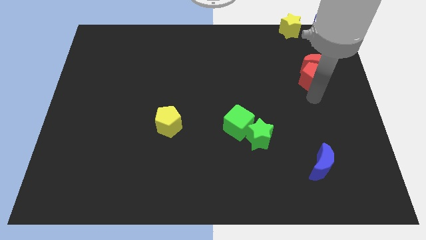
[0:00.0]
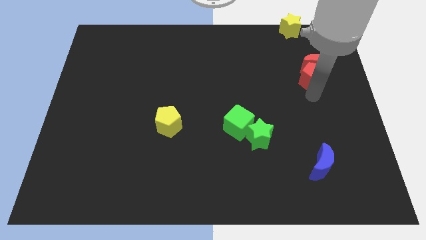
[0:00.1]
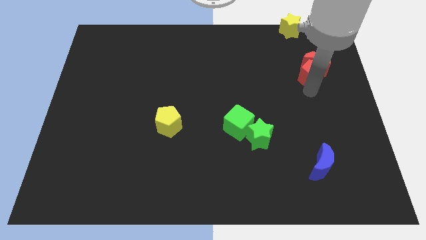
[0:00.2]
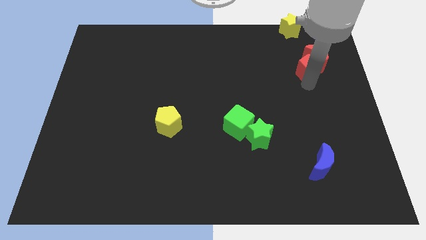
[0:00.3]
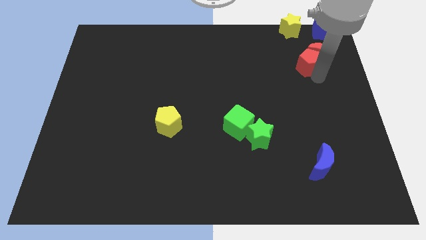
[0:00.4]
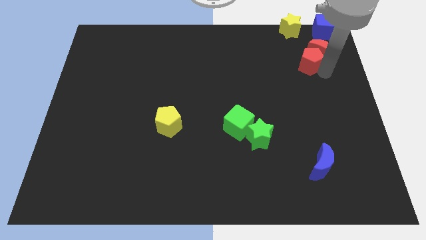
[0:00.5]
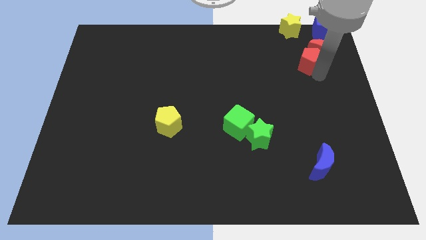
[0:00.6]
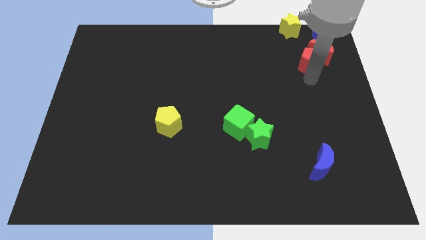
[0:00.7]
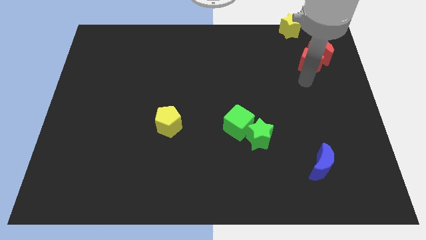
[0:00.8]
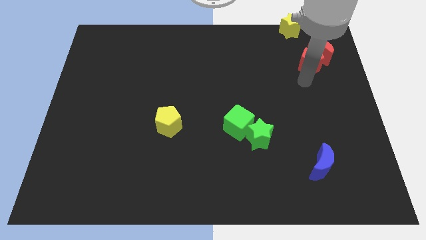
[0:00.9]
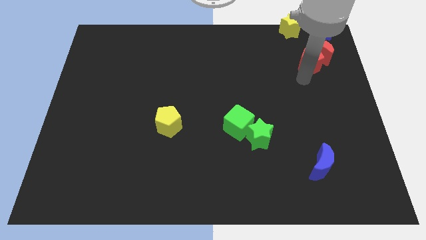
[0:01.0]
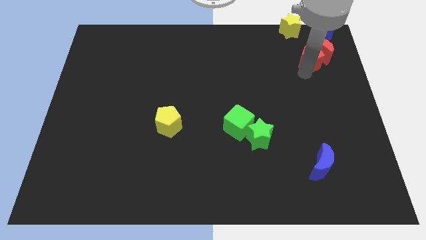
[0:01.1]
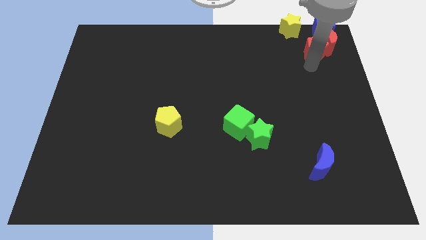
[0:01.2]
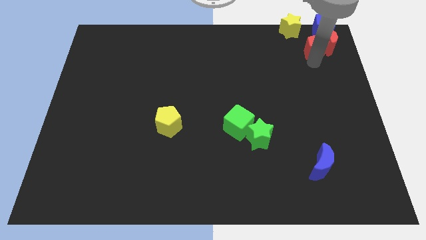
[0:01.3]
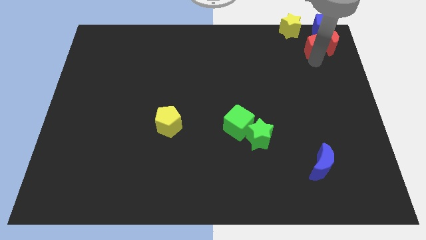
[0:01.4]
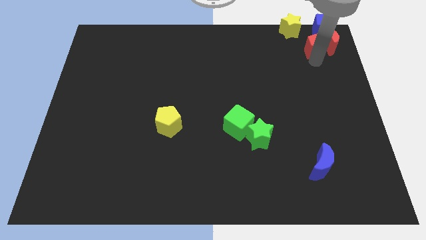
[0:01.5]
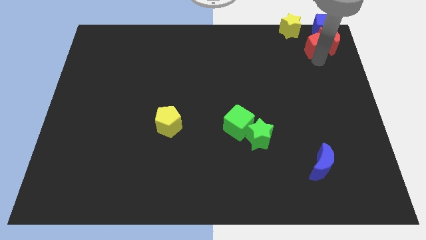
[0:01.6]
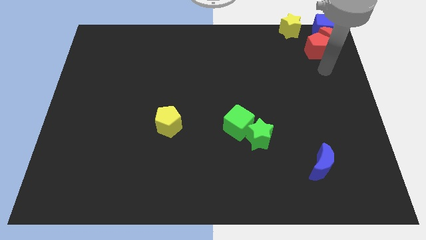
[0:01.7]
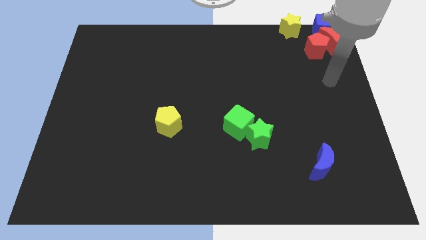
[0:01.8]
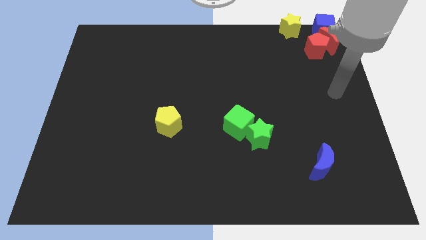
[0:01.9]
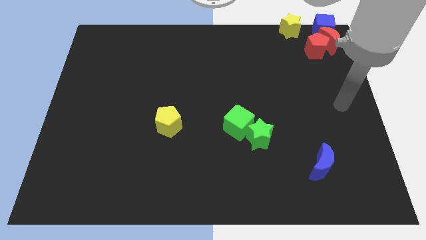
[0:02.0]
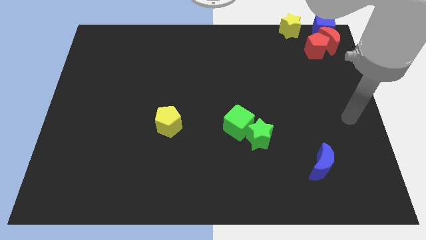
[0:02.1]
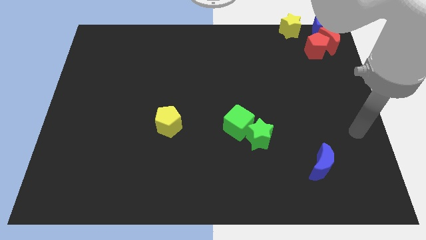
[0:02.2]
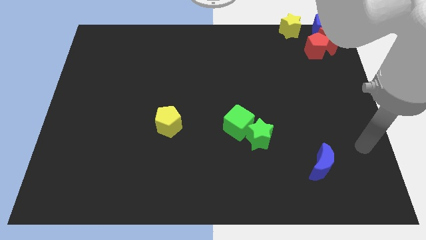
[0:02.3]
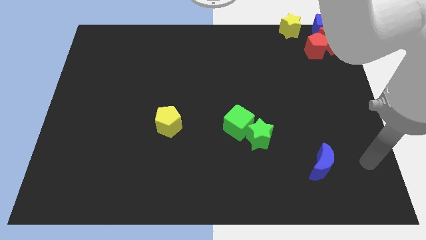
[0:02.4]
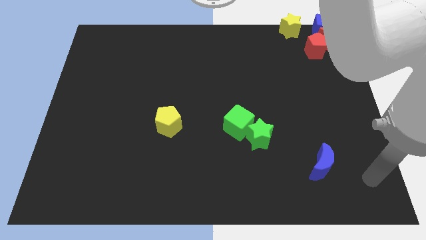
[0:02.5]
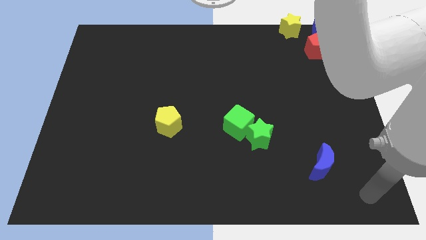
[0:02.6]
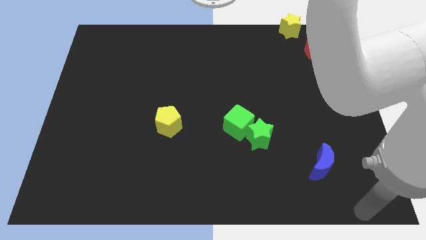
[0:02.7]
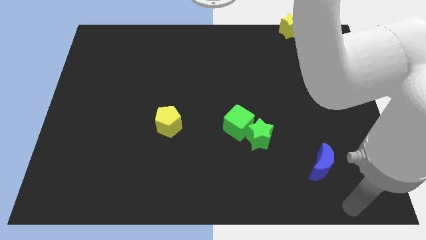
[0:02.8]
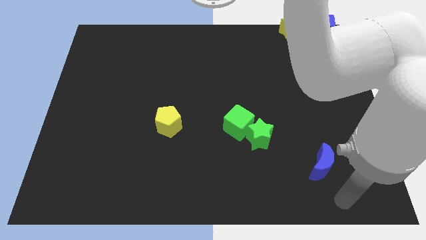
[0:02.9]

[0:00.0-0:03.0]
move red blocks below the blue cube

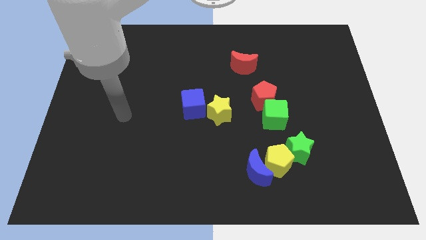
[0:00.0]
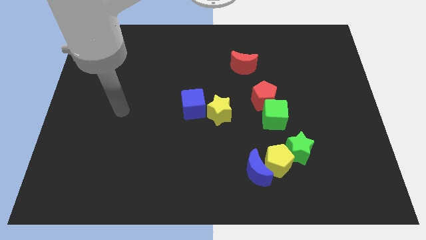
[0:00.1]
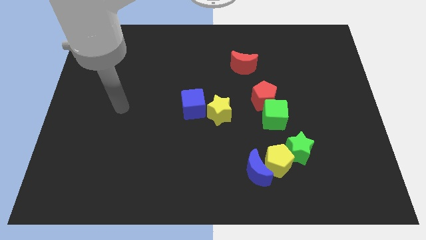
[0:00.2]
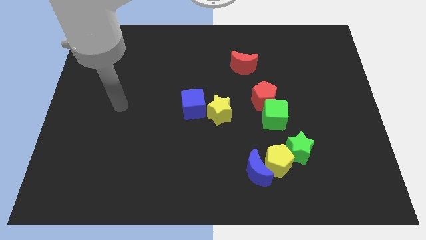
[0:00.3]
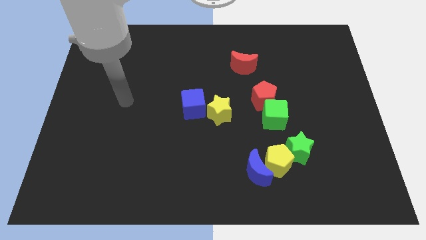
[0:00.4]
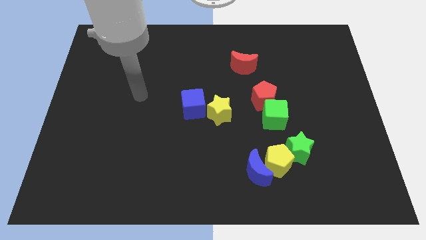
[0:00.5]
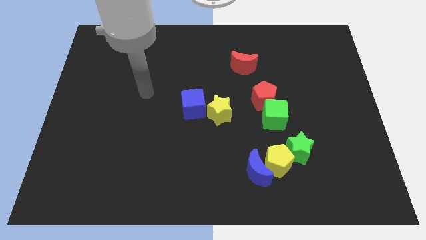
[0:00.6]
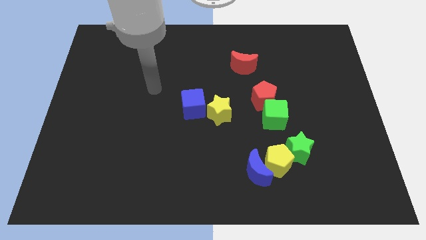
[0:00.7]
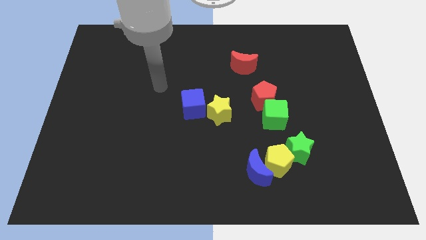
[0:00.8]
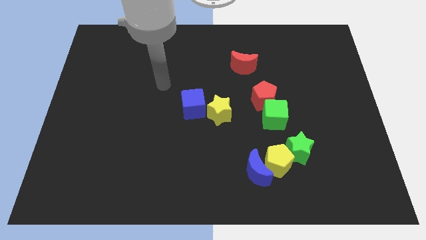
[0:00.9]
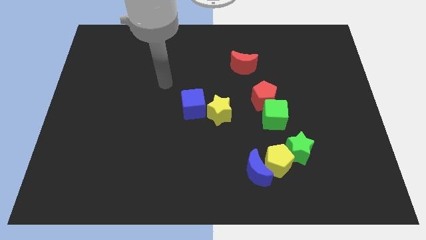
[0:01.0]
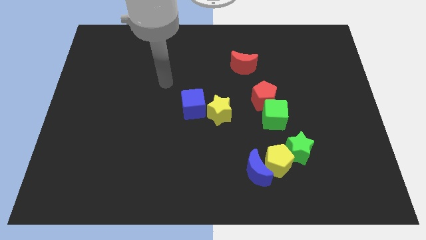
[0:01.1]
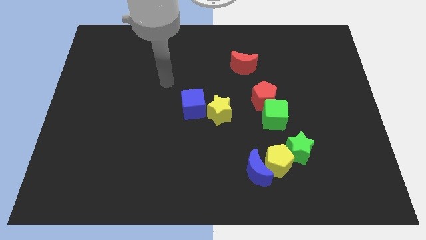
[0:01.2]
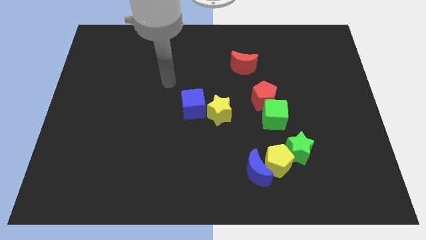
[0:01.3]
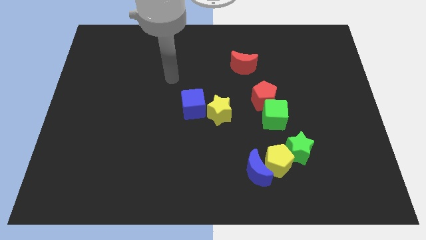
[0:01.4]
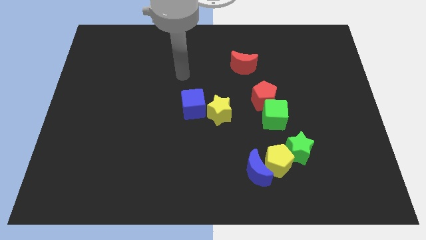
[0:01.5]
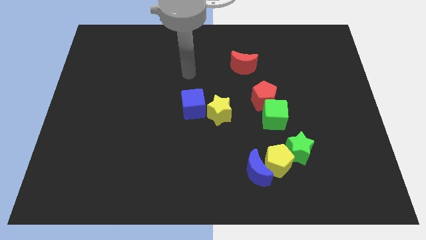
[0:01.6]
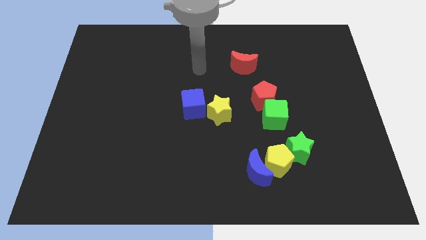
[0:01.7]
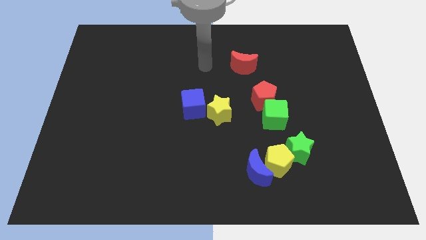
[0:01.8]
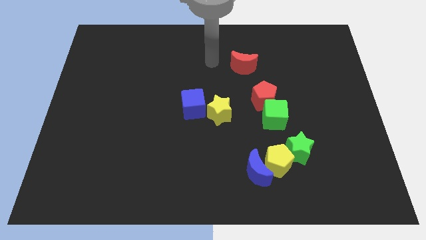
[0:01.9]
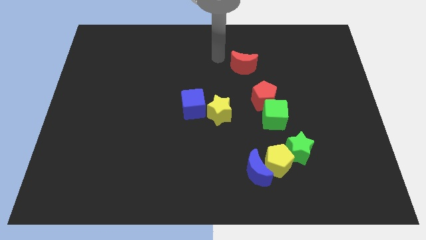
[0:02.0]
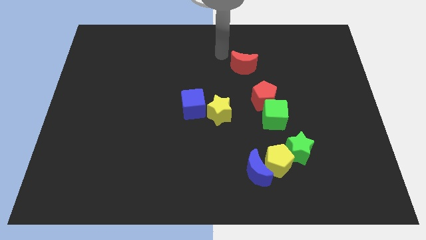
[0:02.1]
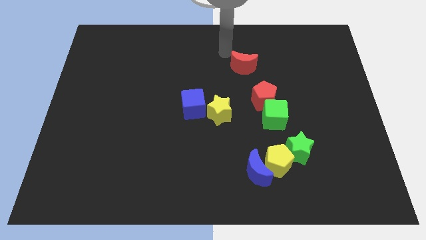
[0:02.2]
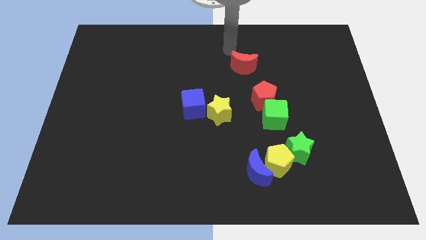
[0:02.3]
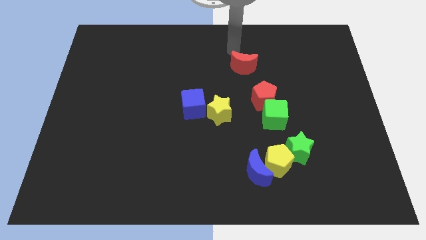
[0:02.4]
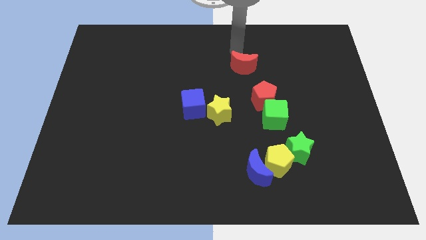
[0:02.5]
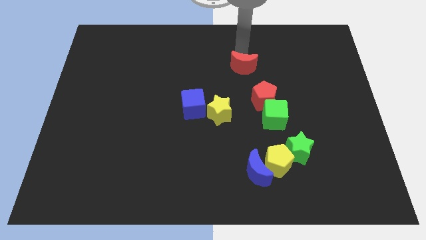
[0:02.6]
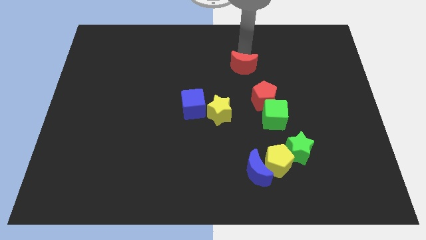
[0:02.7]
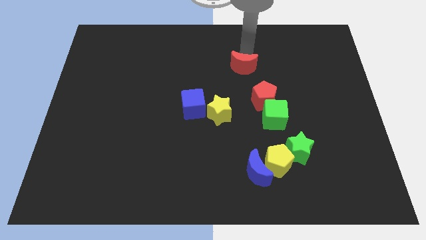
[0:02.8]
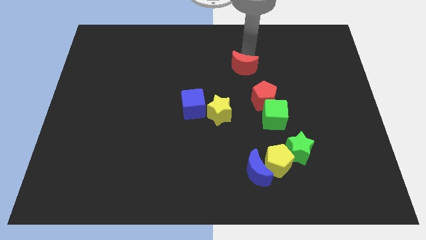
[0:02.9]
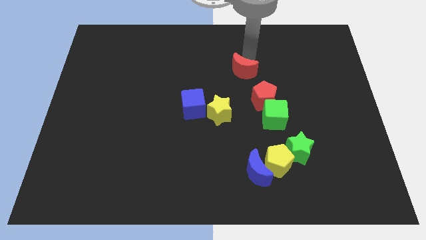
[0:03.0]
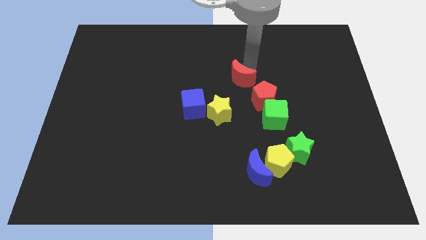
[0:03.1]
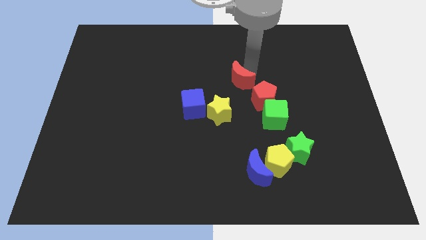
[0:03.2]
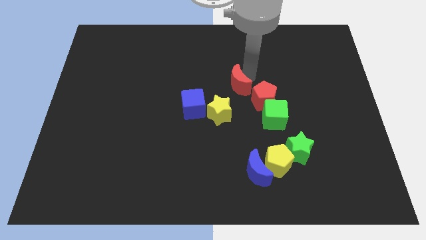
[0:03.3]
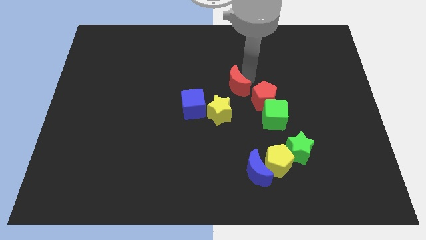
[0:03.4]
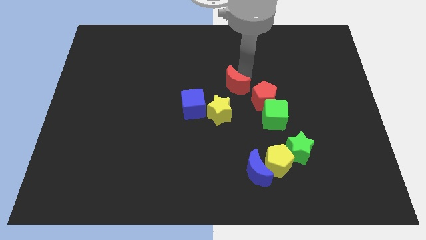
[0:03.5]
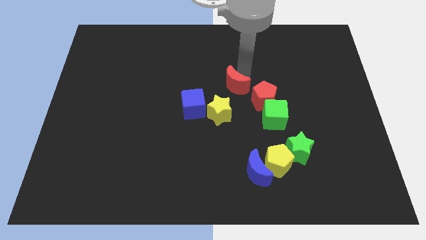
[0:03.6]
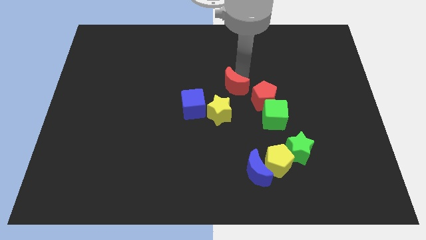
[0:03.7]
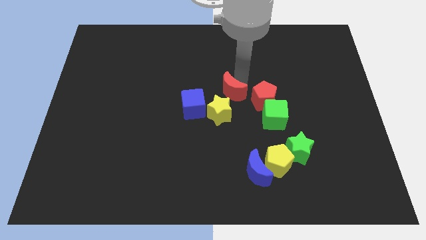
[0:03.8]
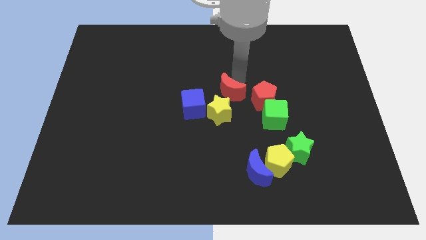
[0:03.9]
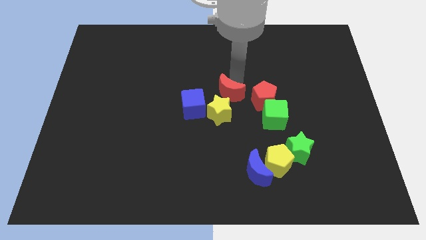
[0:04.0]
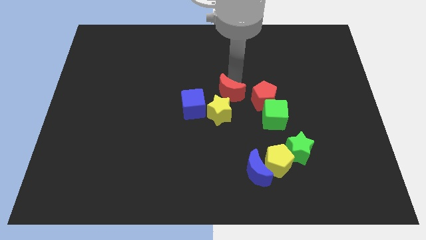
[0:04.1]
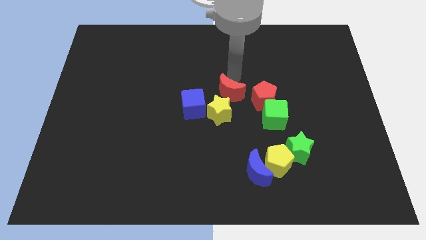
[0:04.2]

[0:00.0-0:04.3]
move red moon left beside the red pentagon

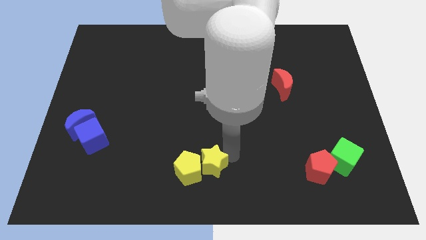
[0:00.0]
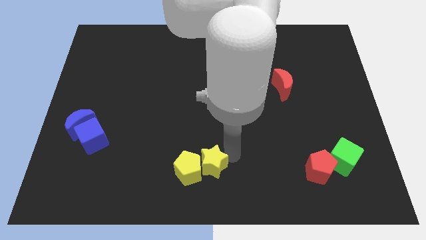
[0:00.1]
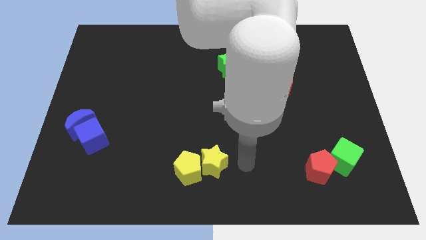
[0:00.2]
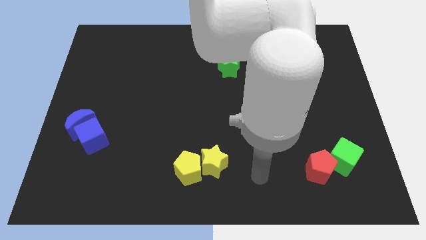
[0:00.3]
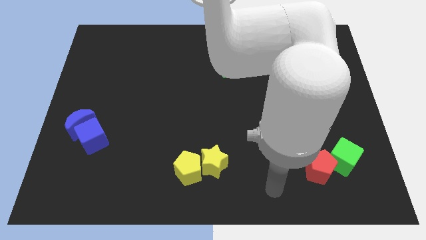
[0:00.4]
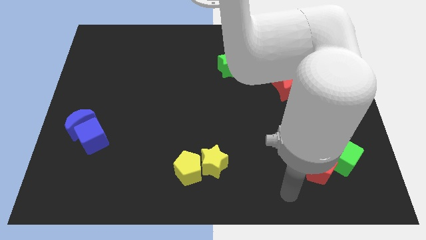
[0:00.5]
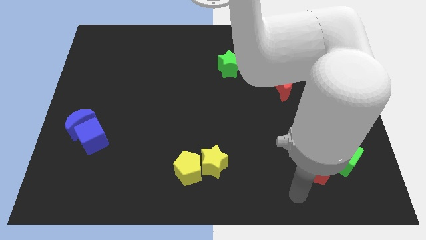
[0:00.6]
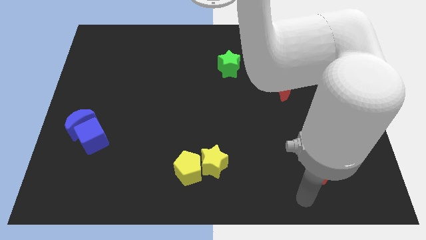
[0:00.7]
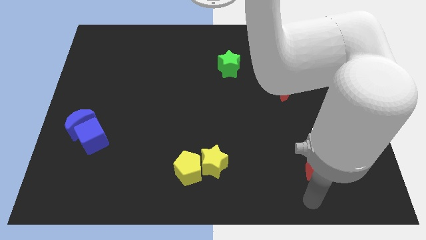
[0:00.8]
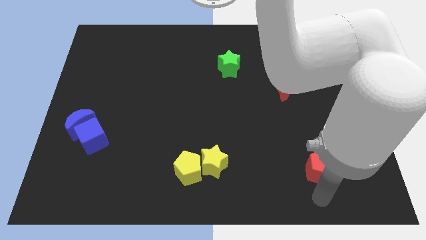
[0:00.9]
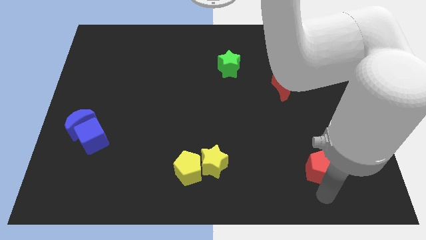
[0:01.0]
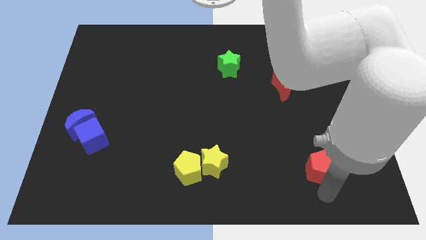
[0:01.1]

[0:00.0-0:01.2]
point your arm at the bottom of the red pentagon

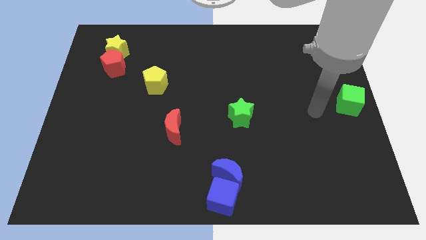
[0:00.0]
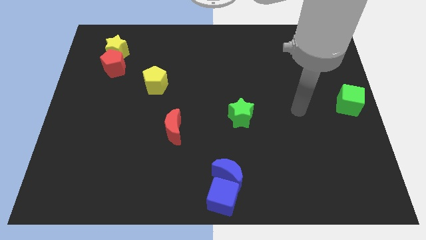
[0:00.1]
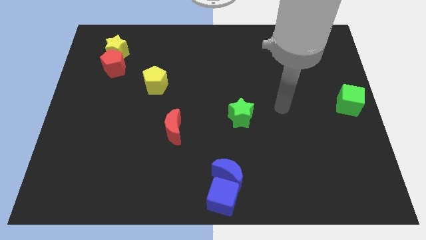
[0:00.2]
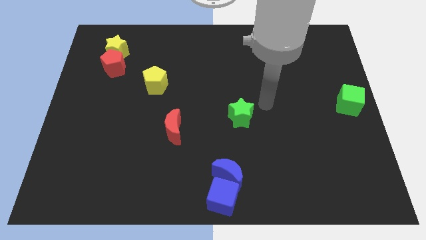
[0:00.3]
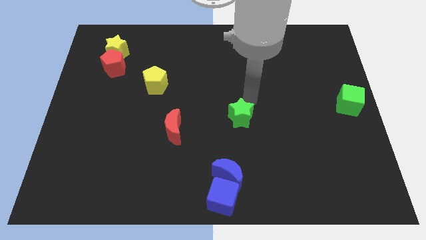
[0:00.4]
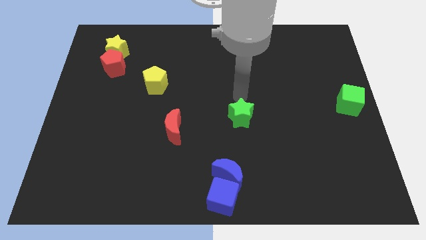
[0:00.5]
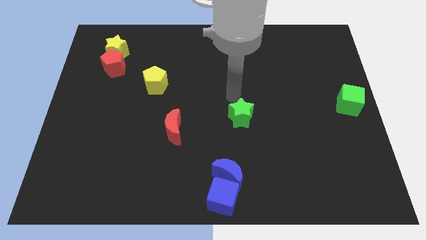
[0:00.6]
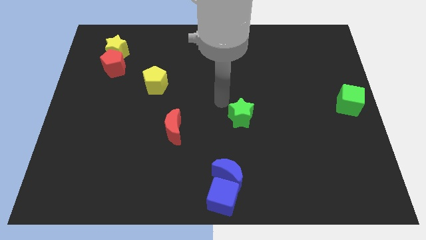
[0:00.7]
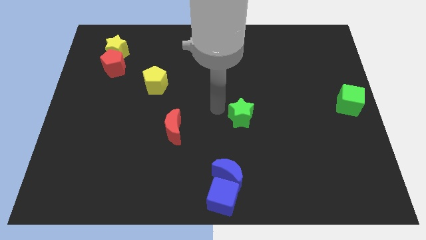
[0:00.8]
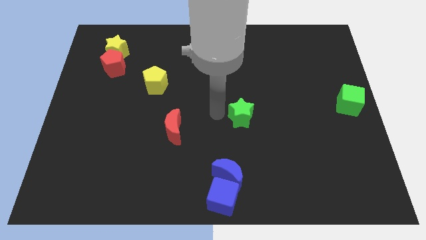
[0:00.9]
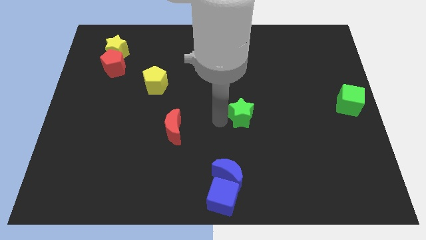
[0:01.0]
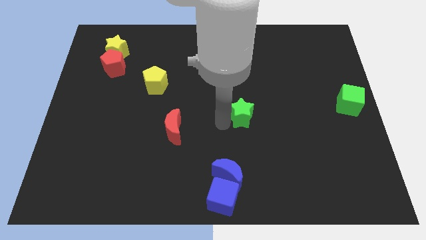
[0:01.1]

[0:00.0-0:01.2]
move your arm to the left of green star
